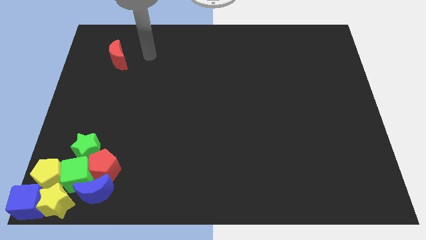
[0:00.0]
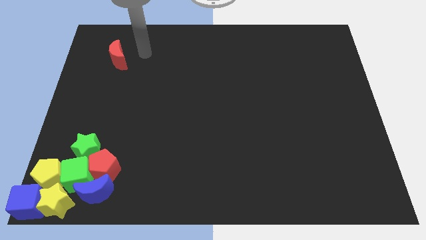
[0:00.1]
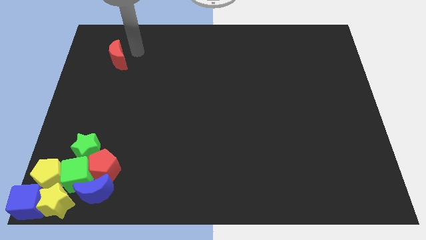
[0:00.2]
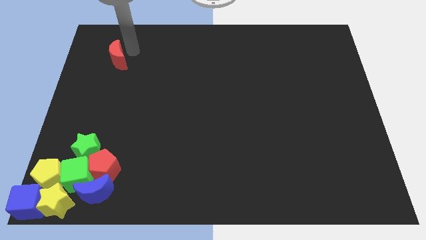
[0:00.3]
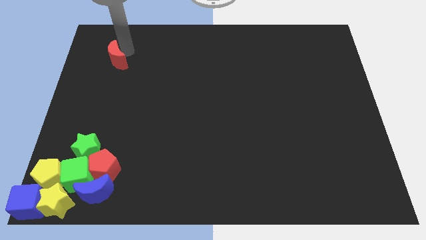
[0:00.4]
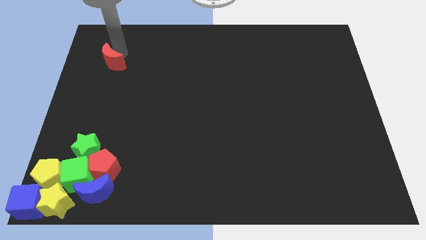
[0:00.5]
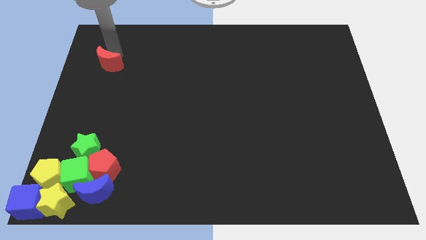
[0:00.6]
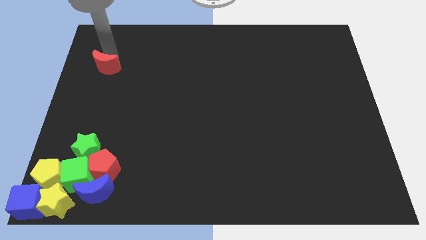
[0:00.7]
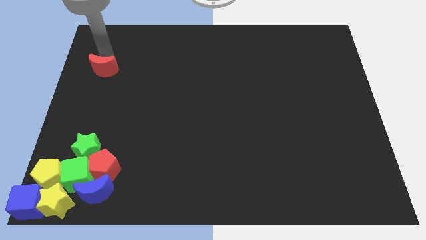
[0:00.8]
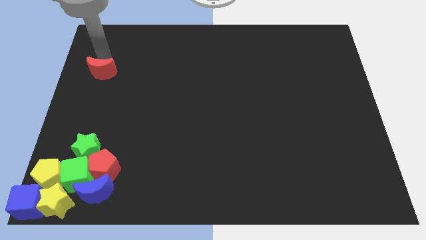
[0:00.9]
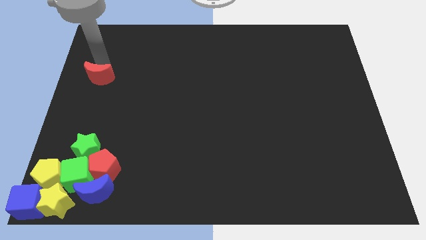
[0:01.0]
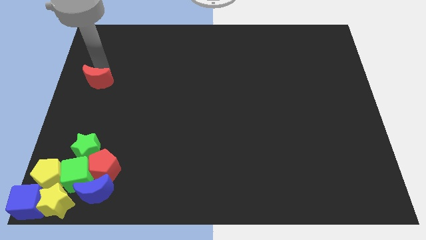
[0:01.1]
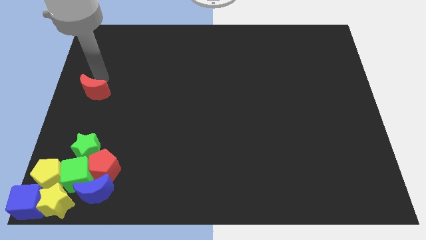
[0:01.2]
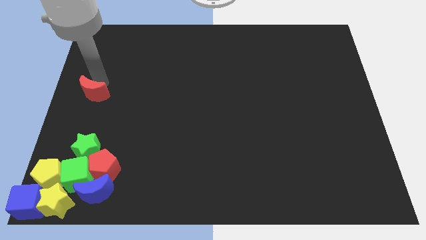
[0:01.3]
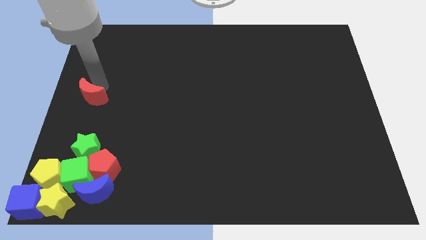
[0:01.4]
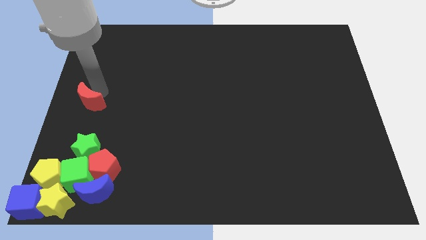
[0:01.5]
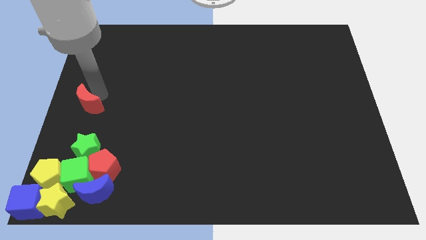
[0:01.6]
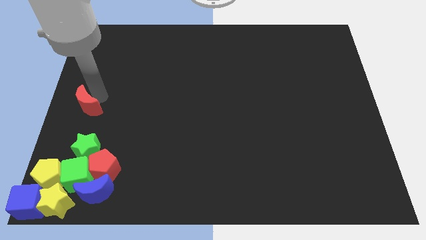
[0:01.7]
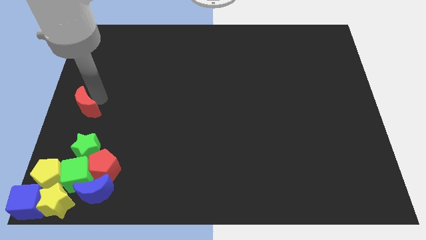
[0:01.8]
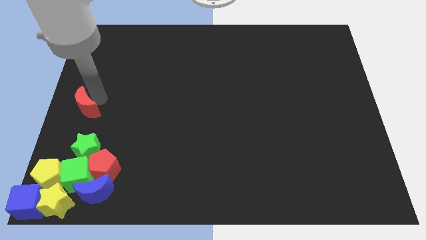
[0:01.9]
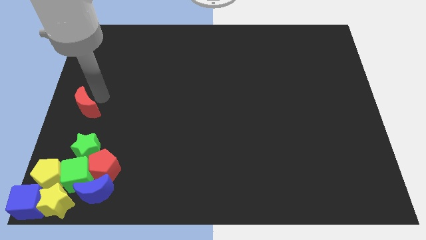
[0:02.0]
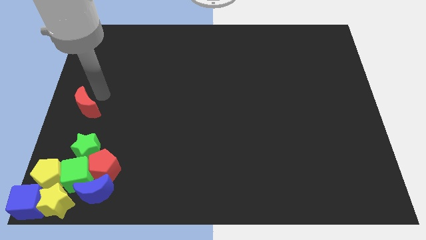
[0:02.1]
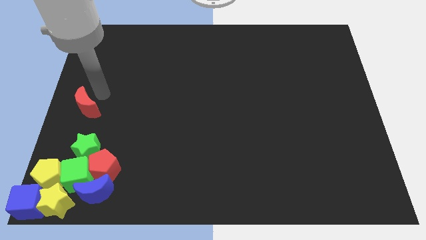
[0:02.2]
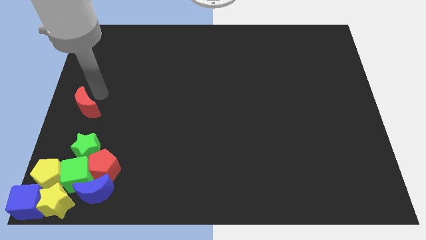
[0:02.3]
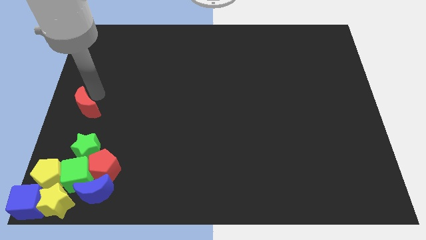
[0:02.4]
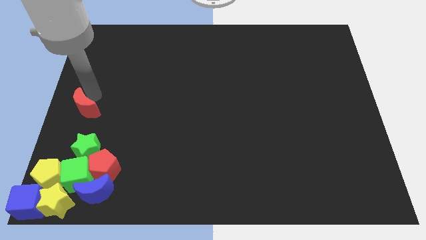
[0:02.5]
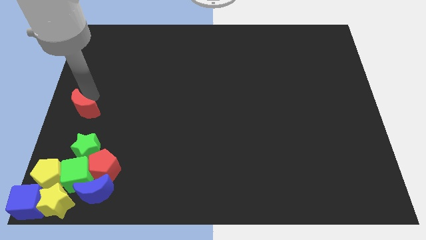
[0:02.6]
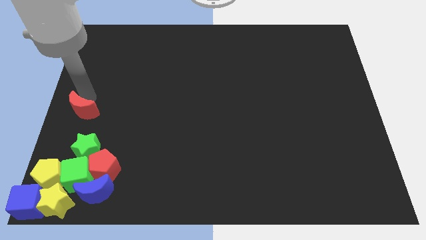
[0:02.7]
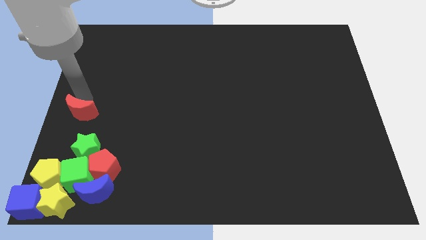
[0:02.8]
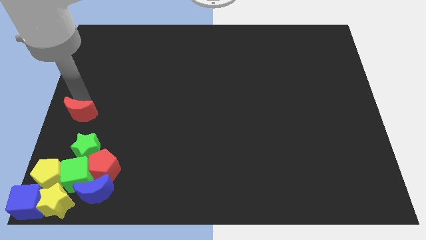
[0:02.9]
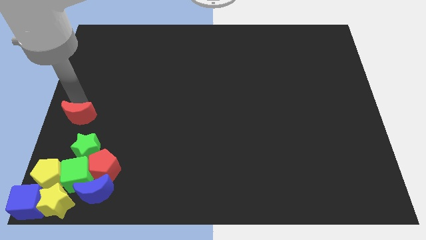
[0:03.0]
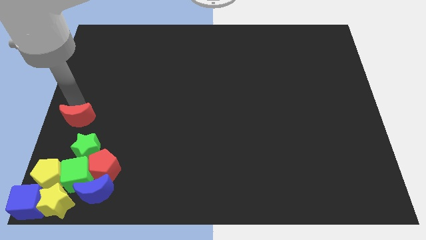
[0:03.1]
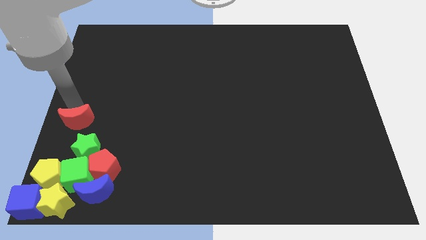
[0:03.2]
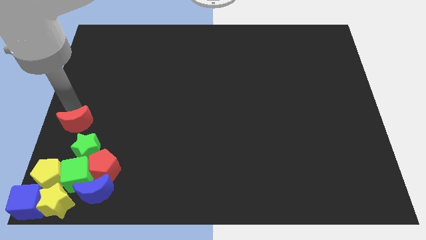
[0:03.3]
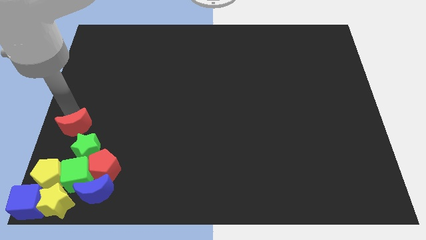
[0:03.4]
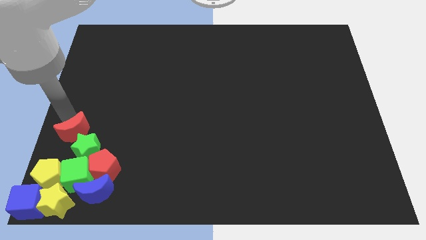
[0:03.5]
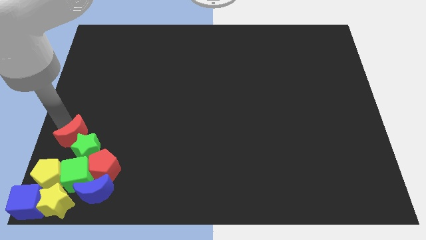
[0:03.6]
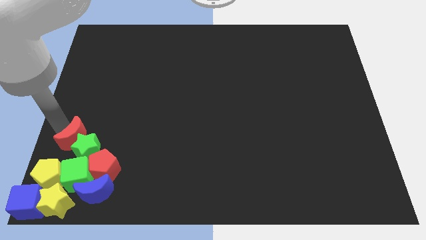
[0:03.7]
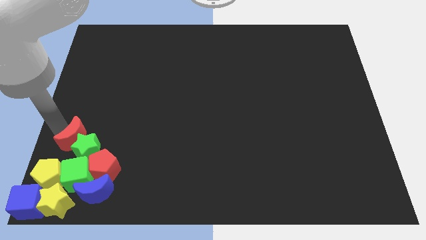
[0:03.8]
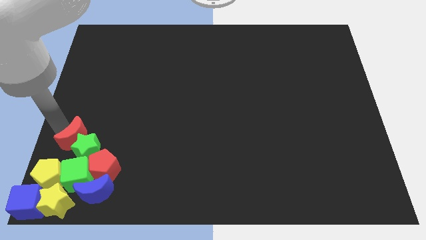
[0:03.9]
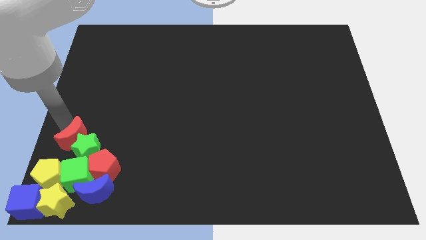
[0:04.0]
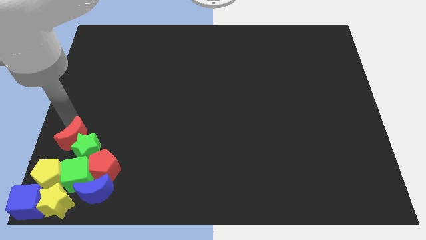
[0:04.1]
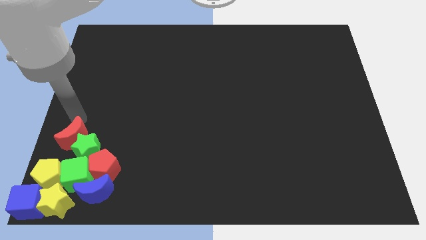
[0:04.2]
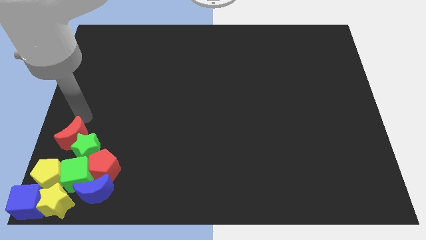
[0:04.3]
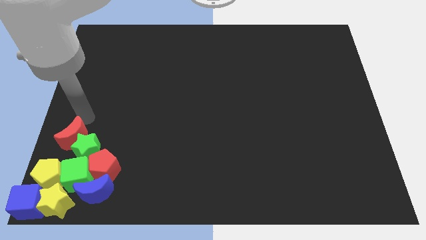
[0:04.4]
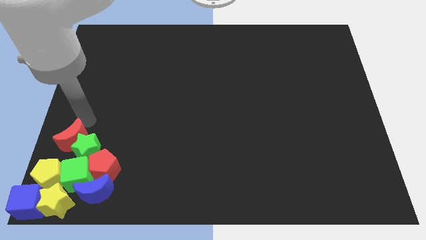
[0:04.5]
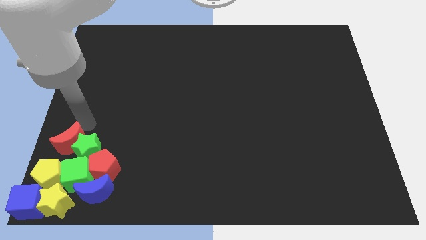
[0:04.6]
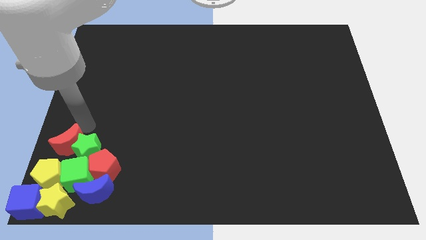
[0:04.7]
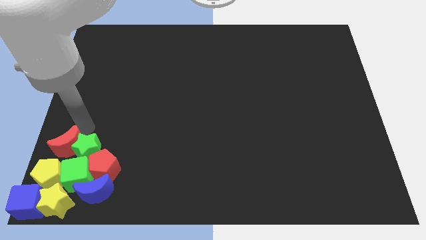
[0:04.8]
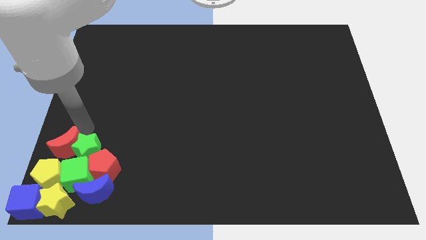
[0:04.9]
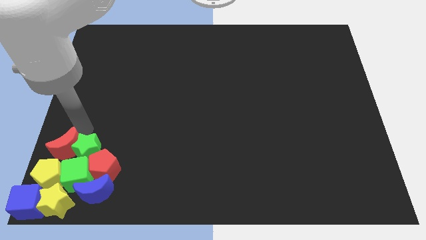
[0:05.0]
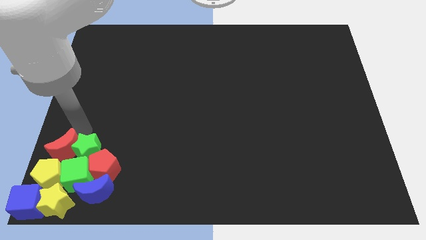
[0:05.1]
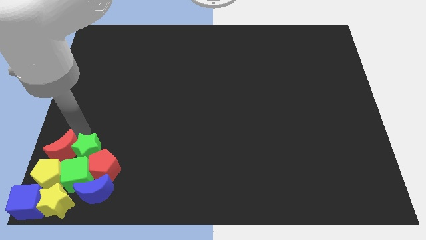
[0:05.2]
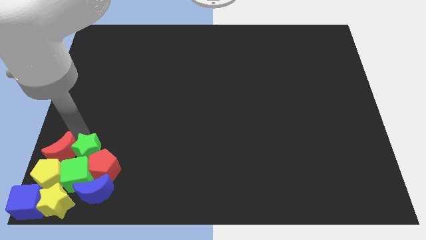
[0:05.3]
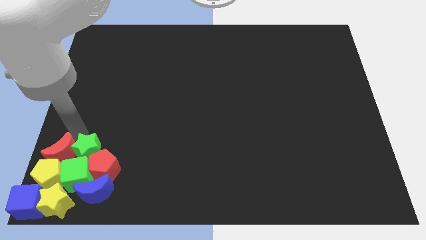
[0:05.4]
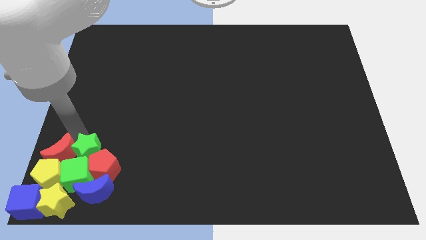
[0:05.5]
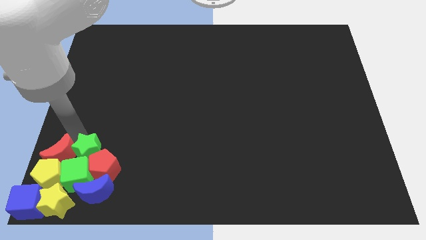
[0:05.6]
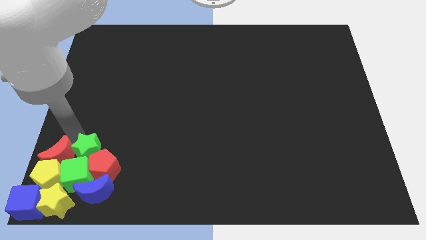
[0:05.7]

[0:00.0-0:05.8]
push the red moon into the group of blocks

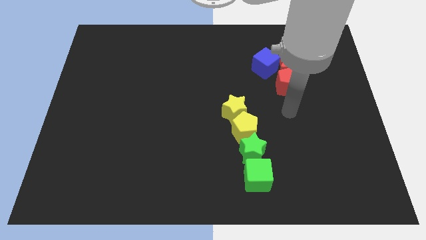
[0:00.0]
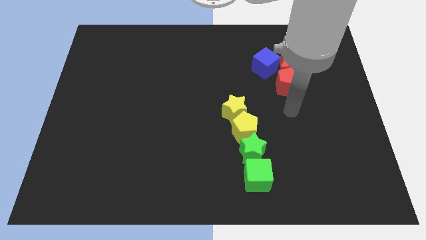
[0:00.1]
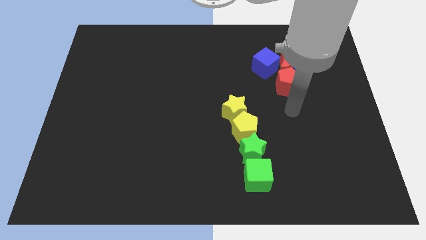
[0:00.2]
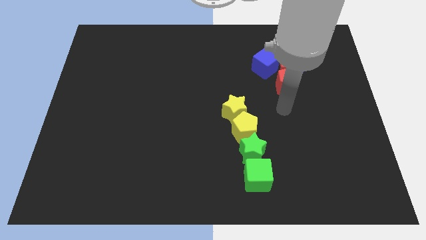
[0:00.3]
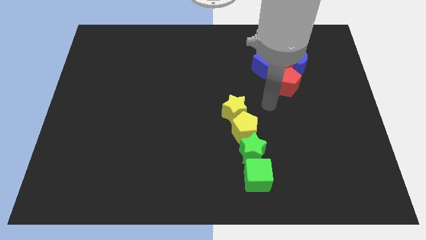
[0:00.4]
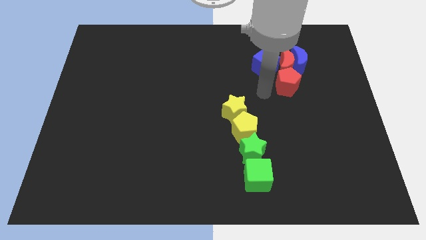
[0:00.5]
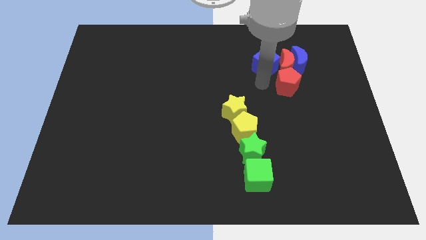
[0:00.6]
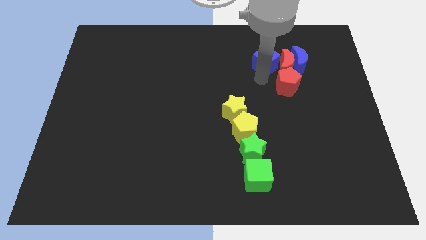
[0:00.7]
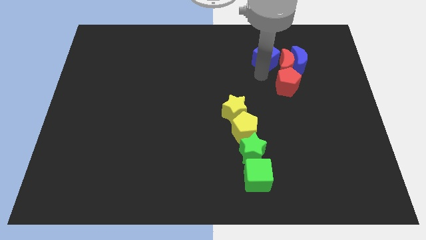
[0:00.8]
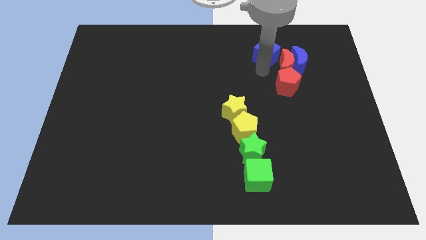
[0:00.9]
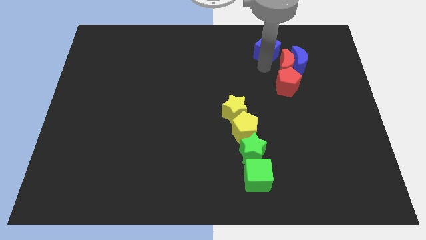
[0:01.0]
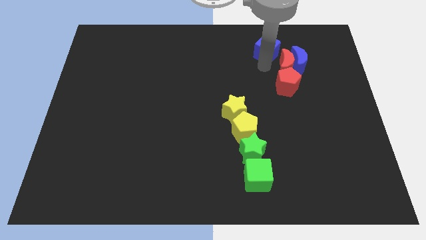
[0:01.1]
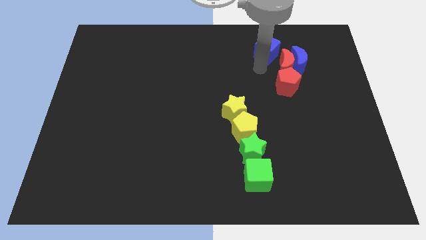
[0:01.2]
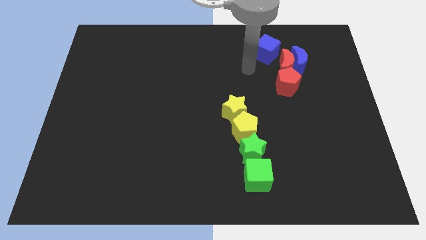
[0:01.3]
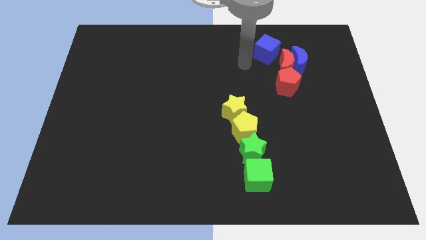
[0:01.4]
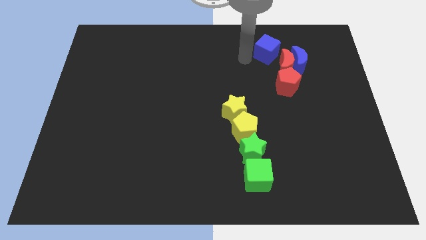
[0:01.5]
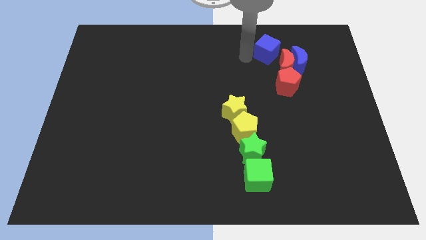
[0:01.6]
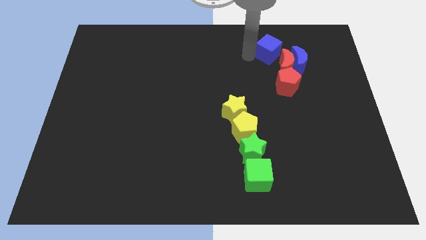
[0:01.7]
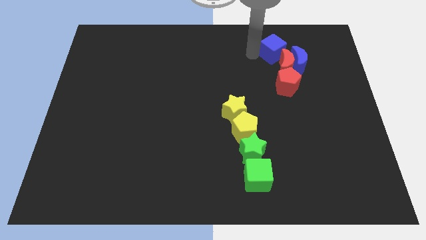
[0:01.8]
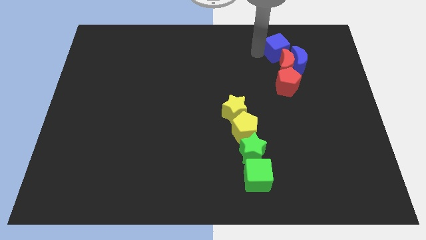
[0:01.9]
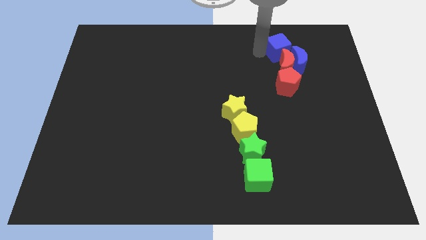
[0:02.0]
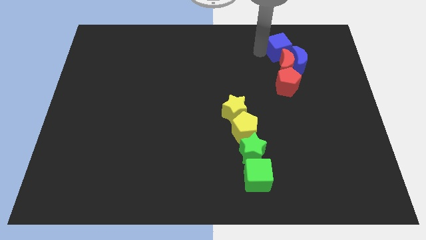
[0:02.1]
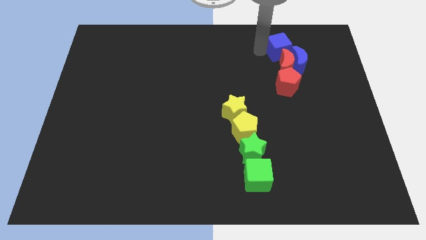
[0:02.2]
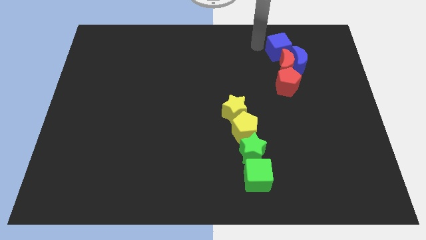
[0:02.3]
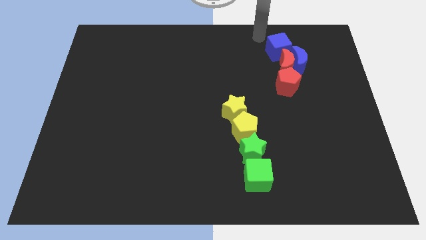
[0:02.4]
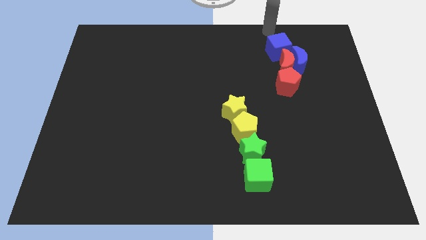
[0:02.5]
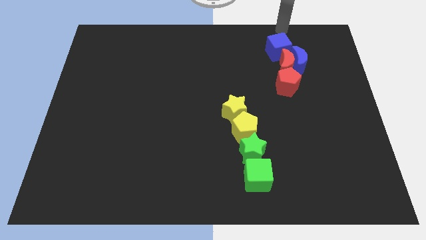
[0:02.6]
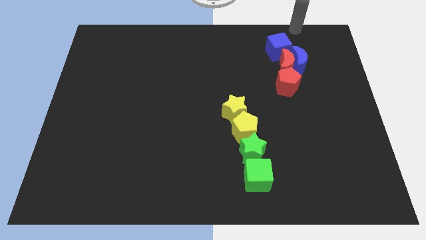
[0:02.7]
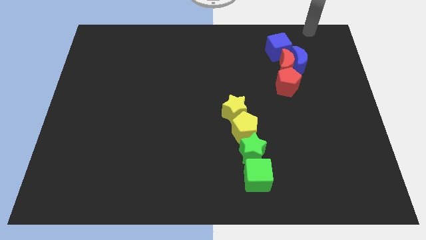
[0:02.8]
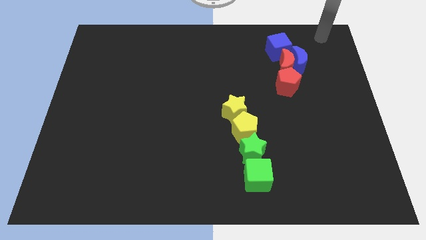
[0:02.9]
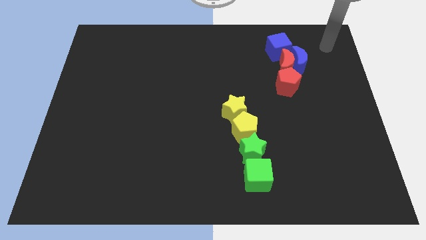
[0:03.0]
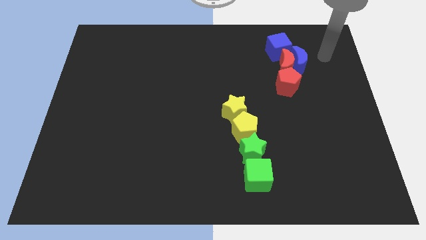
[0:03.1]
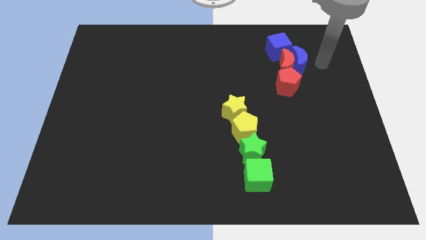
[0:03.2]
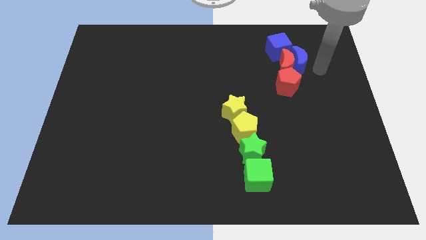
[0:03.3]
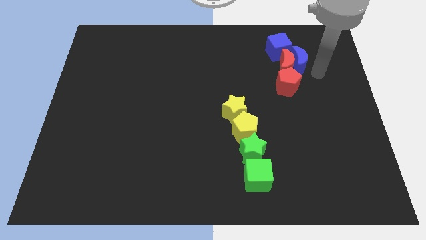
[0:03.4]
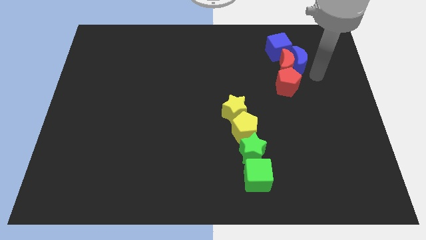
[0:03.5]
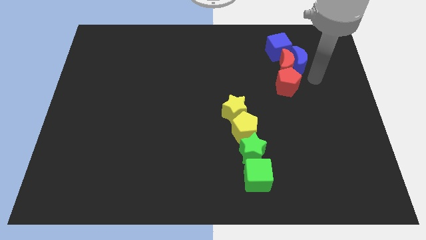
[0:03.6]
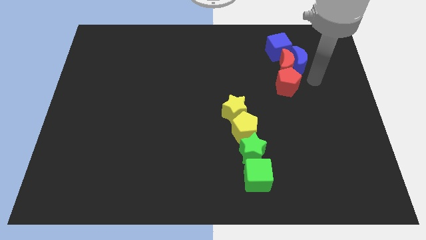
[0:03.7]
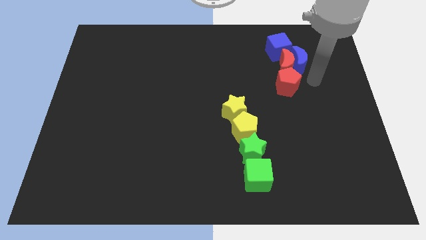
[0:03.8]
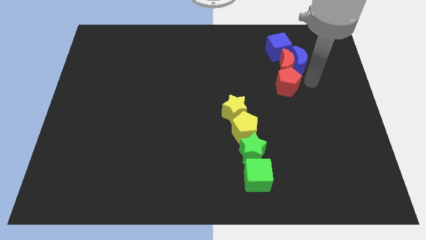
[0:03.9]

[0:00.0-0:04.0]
place the blue cube above the red and blue moon
